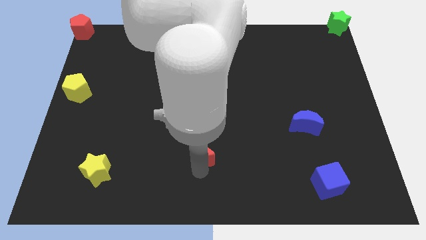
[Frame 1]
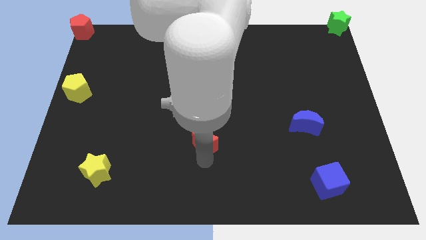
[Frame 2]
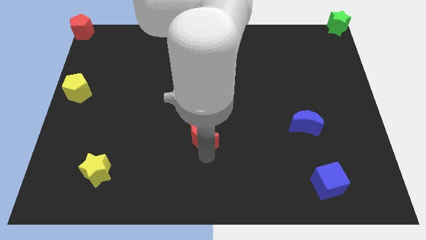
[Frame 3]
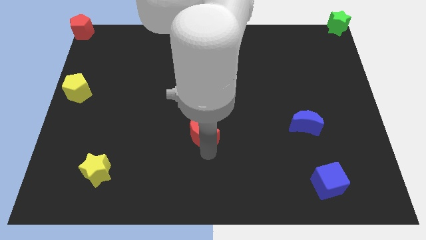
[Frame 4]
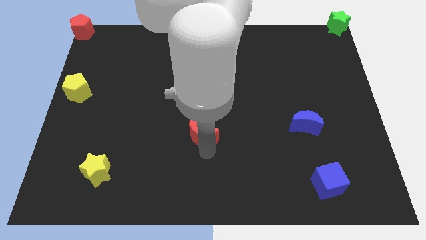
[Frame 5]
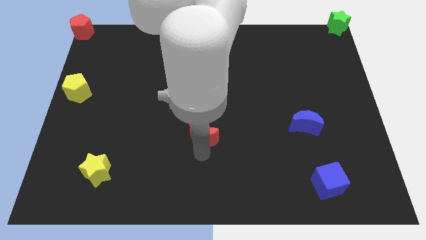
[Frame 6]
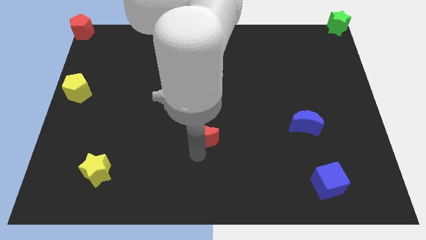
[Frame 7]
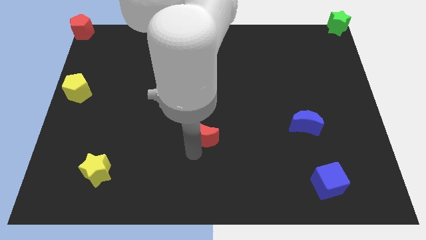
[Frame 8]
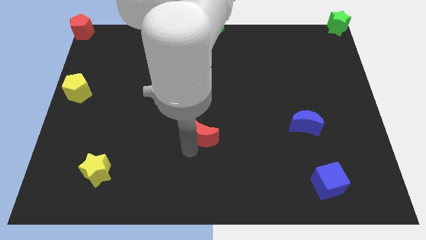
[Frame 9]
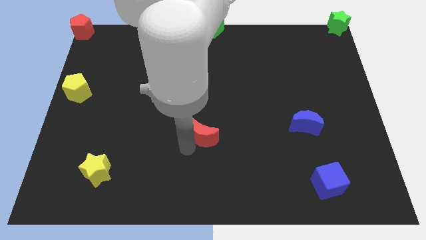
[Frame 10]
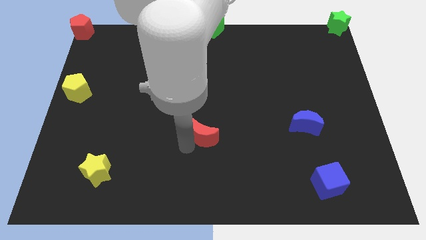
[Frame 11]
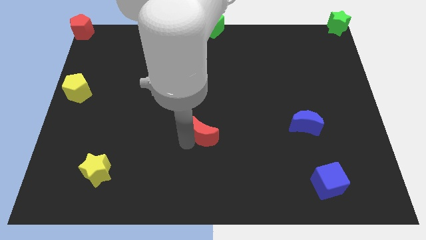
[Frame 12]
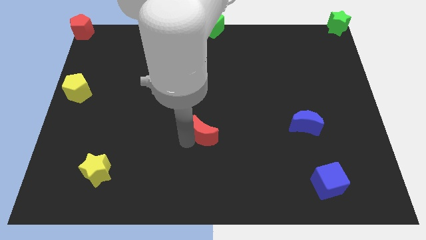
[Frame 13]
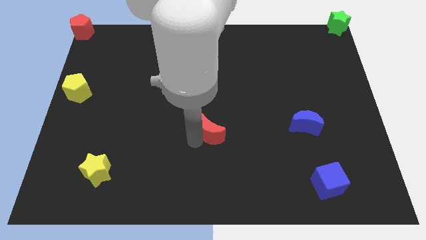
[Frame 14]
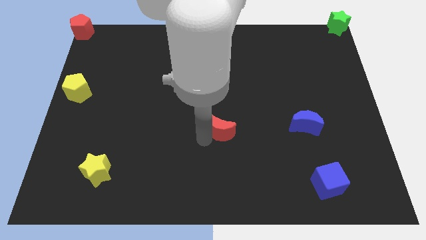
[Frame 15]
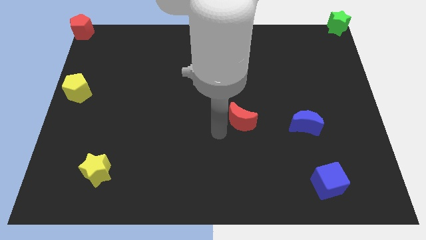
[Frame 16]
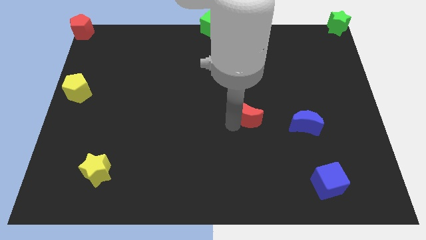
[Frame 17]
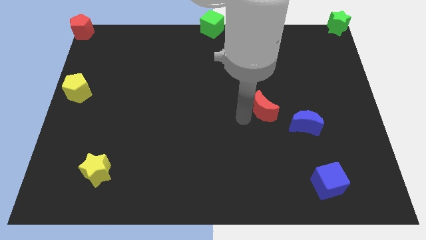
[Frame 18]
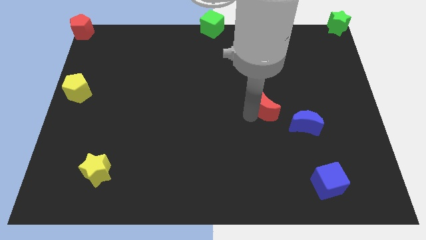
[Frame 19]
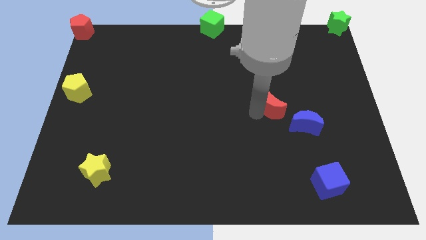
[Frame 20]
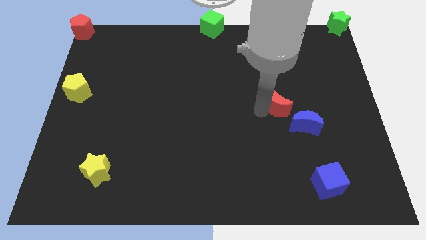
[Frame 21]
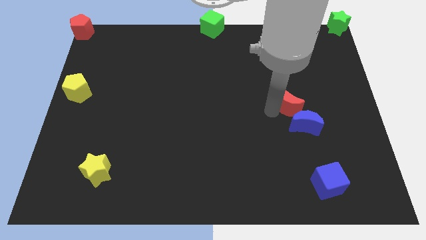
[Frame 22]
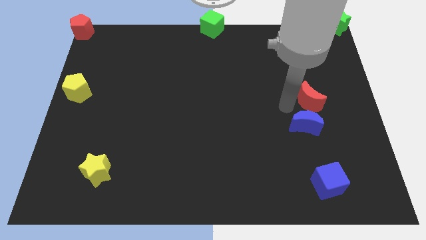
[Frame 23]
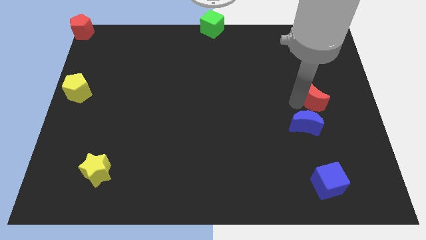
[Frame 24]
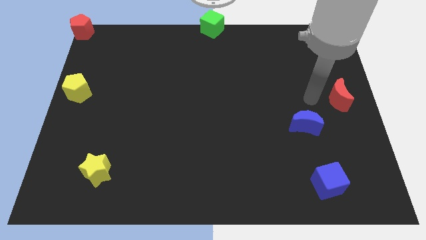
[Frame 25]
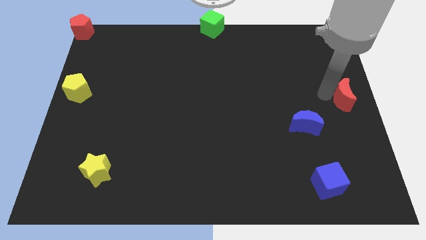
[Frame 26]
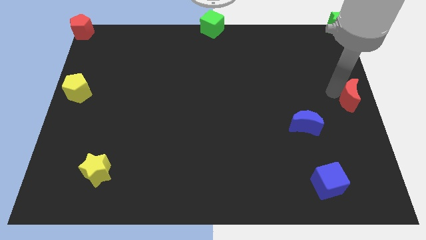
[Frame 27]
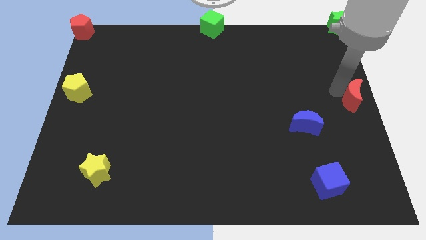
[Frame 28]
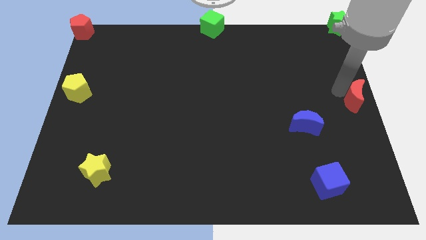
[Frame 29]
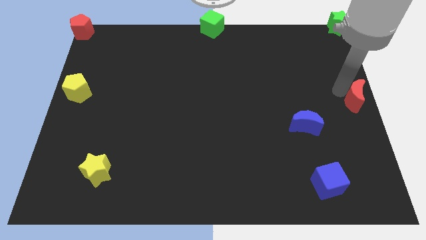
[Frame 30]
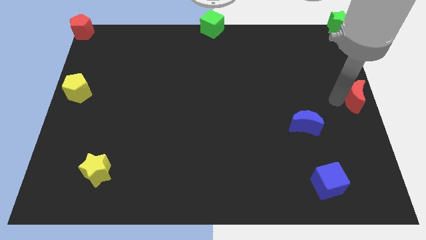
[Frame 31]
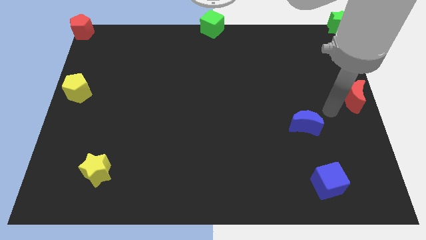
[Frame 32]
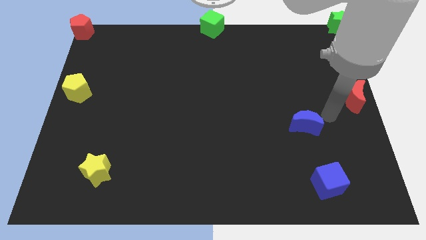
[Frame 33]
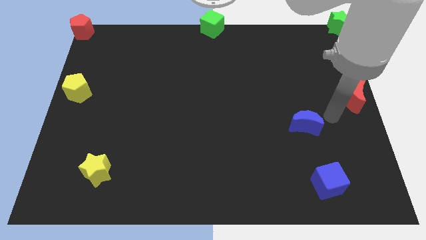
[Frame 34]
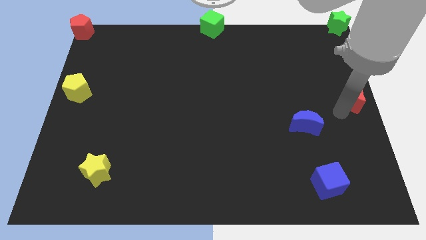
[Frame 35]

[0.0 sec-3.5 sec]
push the red moon to the center right of the board

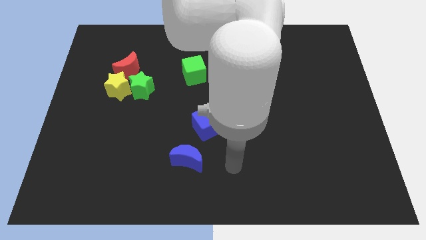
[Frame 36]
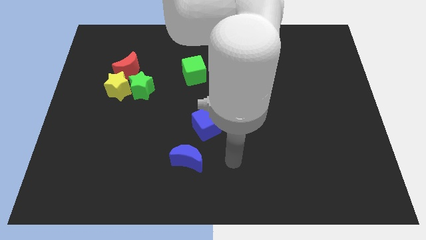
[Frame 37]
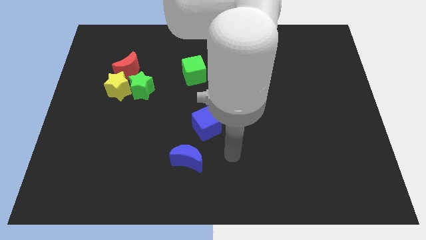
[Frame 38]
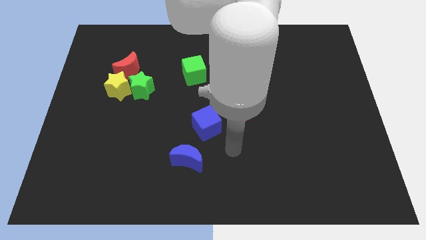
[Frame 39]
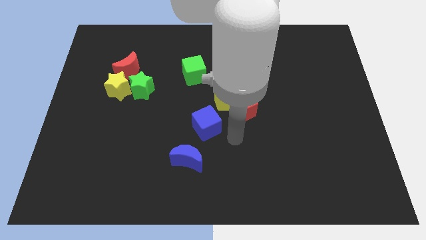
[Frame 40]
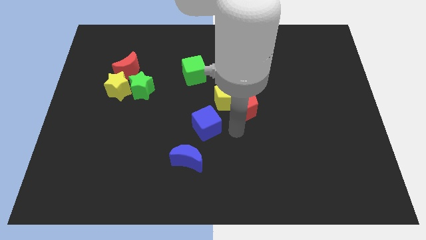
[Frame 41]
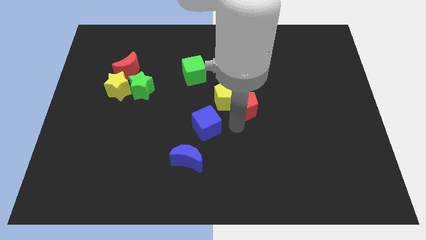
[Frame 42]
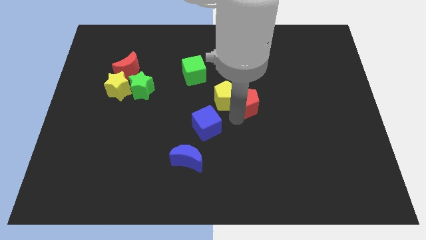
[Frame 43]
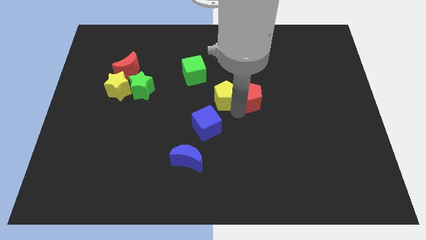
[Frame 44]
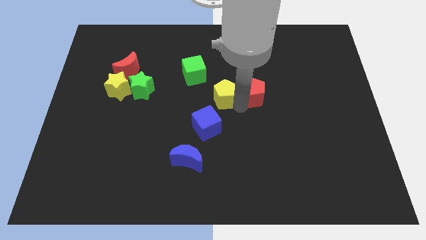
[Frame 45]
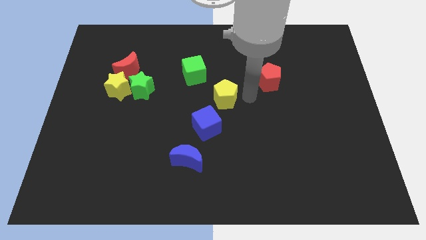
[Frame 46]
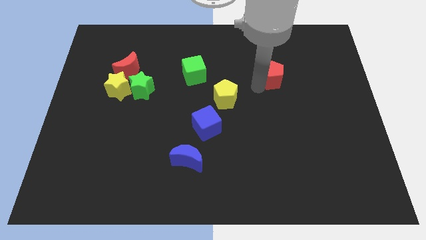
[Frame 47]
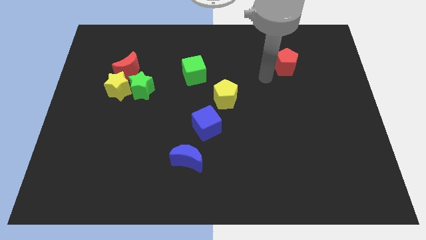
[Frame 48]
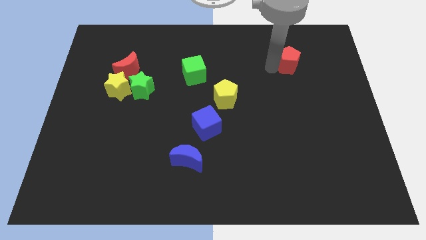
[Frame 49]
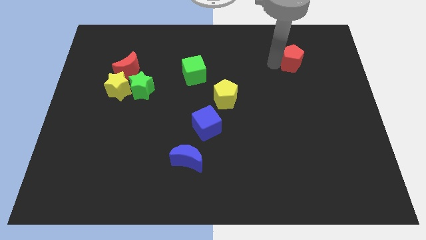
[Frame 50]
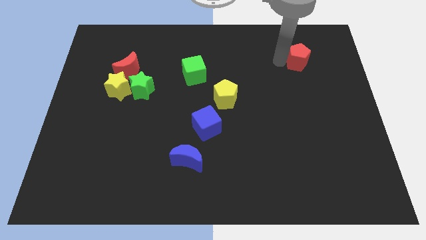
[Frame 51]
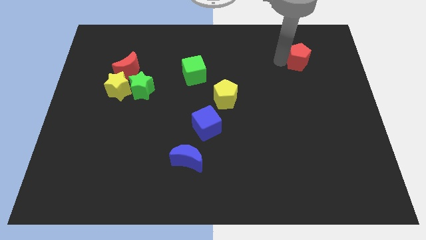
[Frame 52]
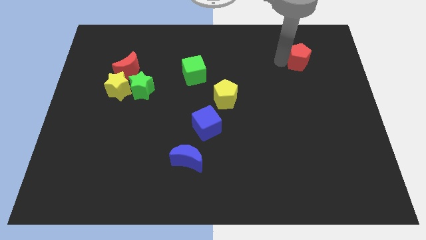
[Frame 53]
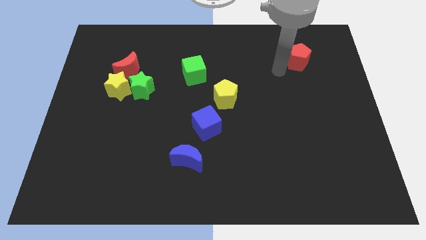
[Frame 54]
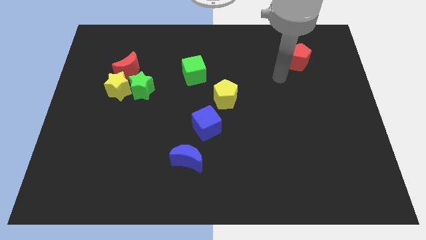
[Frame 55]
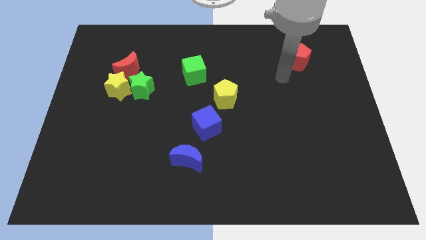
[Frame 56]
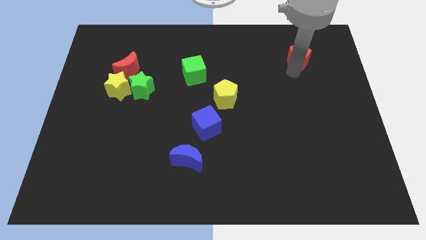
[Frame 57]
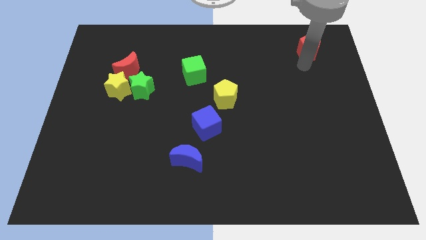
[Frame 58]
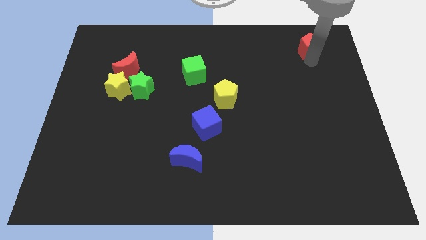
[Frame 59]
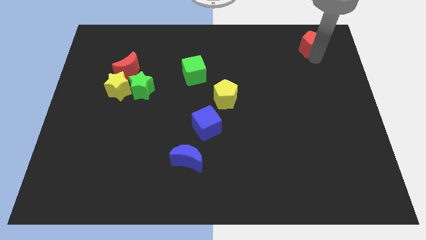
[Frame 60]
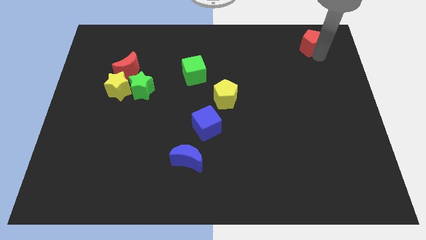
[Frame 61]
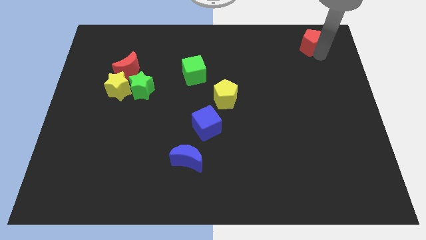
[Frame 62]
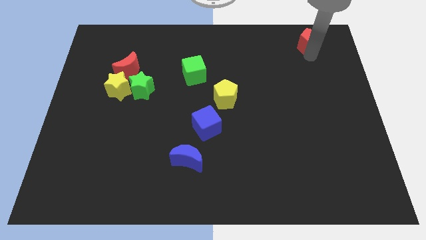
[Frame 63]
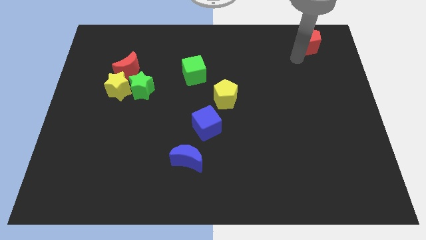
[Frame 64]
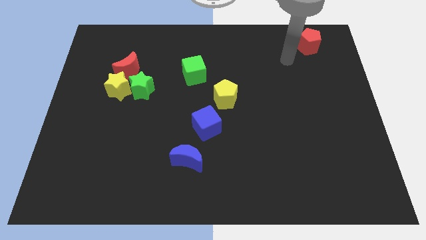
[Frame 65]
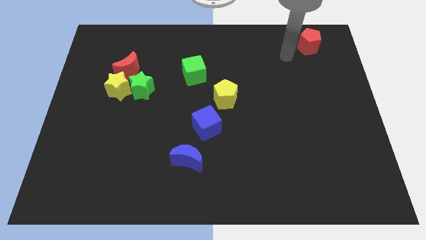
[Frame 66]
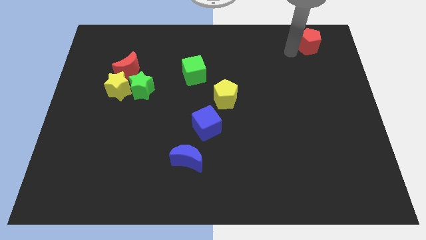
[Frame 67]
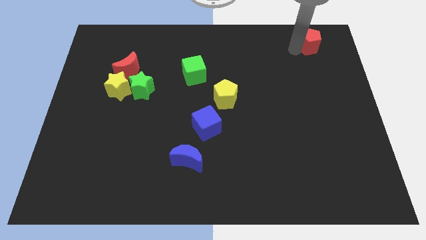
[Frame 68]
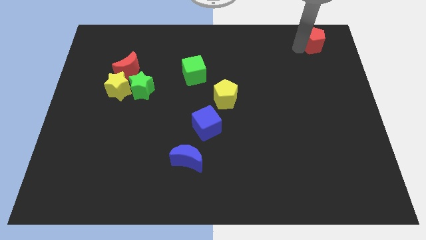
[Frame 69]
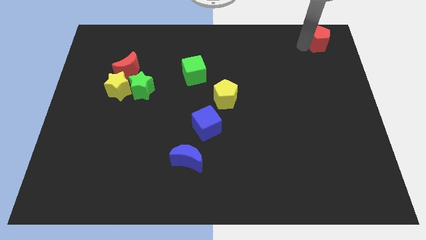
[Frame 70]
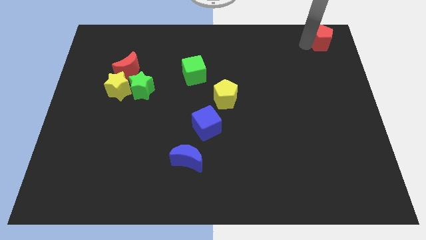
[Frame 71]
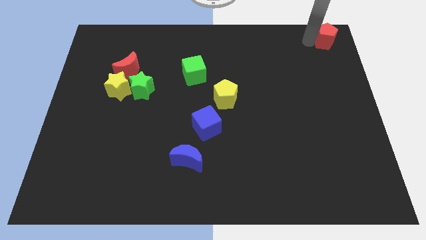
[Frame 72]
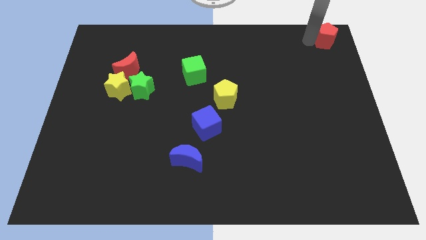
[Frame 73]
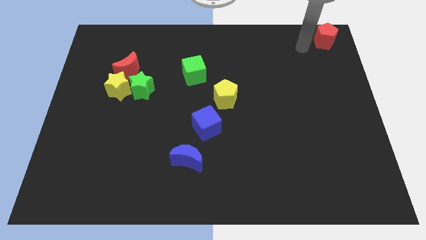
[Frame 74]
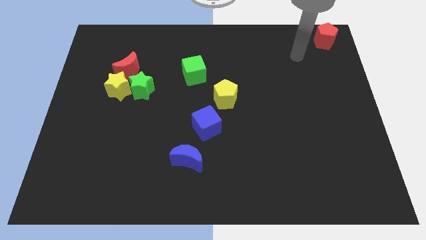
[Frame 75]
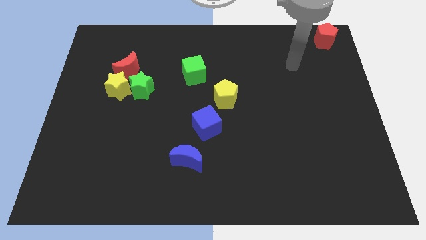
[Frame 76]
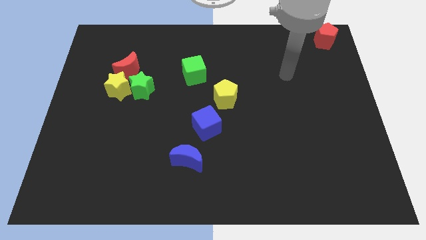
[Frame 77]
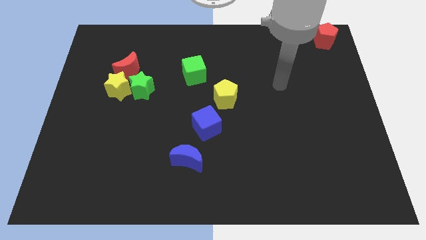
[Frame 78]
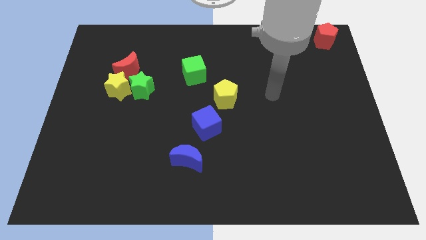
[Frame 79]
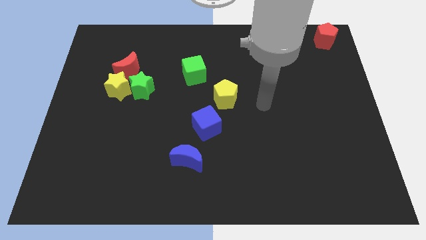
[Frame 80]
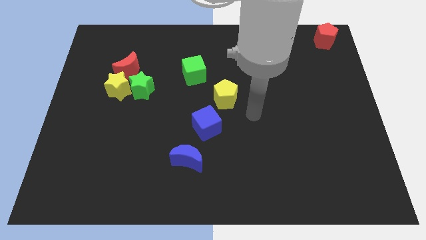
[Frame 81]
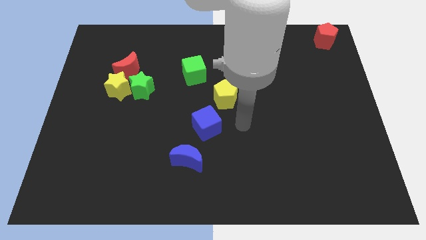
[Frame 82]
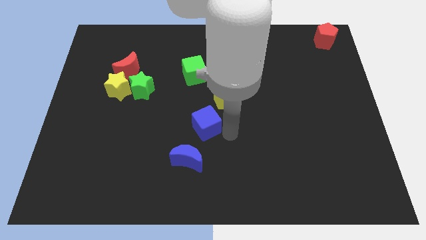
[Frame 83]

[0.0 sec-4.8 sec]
move the red pentagon towards the top right corner of the board

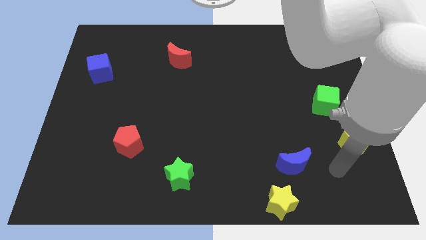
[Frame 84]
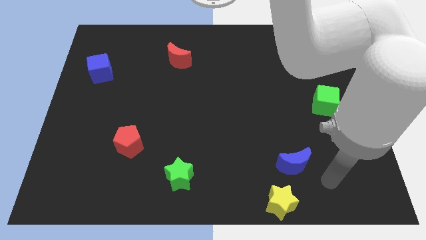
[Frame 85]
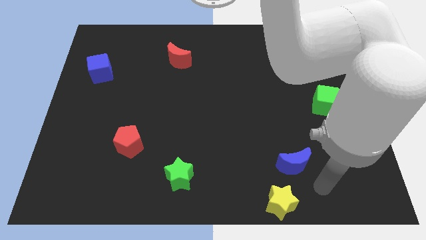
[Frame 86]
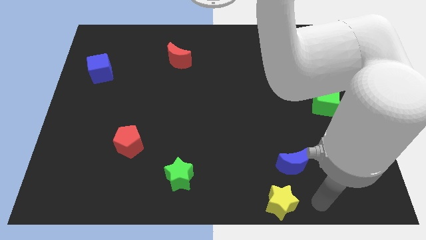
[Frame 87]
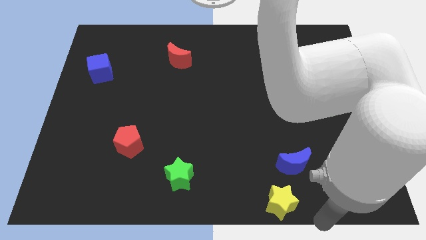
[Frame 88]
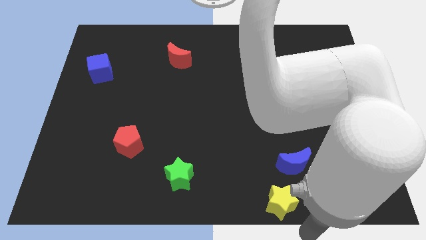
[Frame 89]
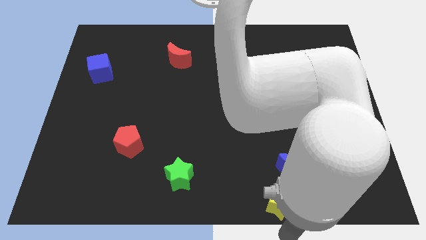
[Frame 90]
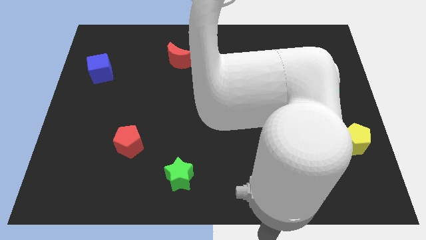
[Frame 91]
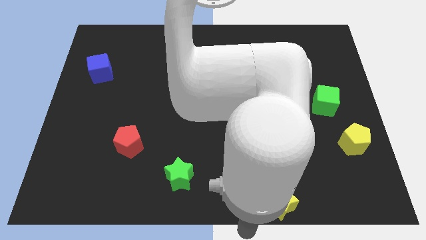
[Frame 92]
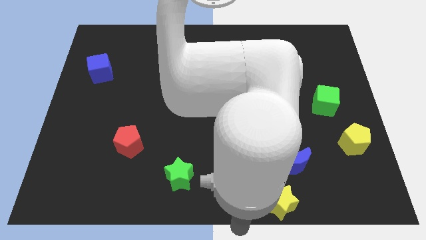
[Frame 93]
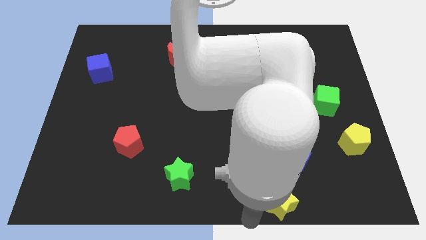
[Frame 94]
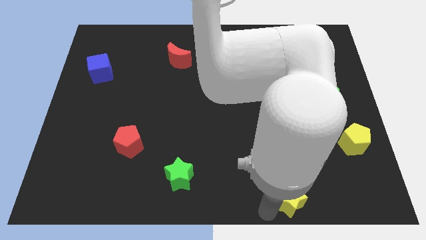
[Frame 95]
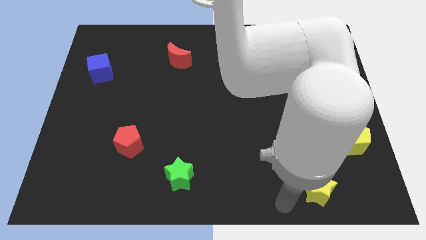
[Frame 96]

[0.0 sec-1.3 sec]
push the yellow star towards the right side of the board
